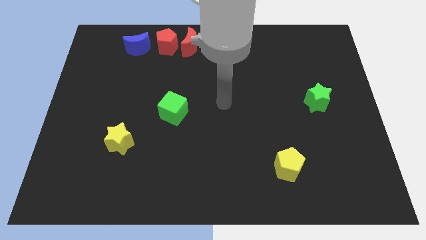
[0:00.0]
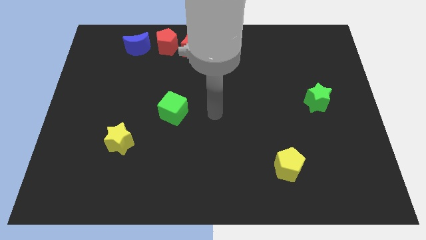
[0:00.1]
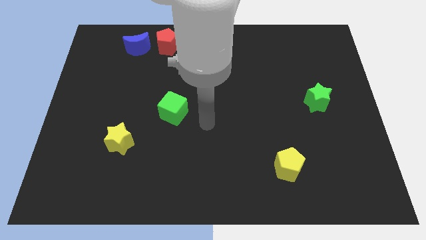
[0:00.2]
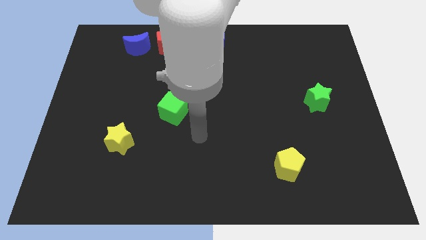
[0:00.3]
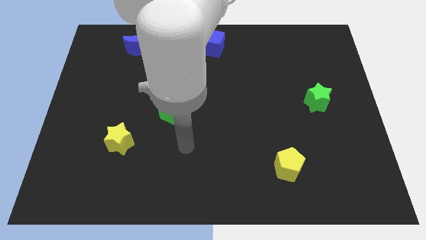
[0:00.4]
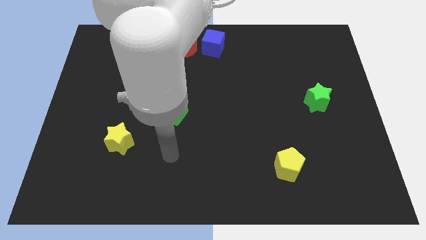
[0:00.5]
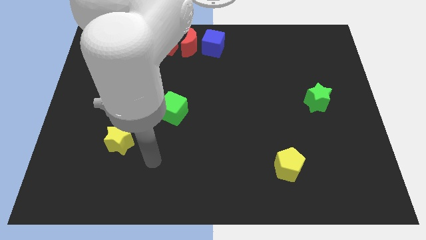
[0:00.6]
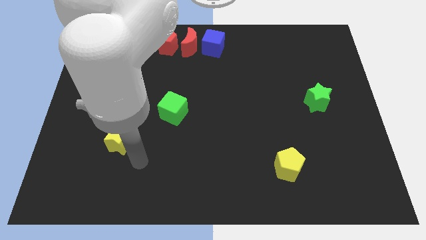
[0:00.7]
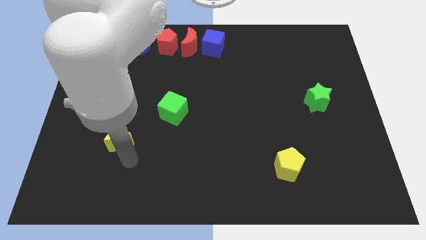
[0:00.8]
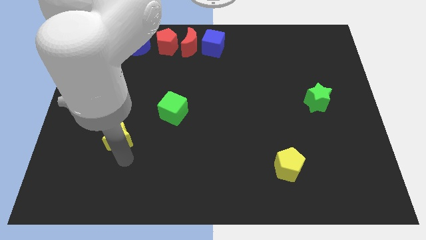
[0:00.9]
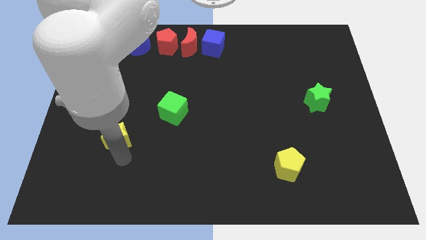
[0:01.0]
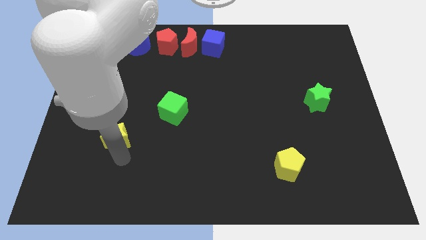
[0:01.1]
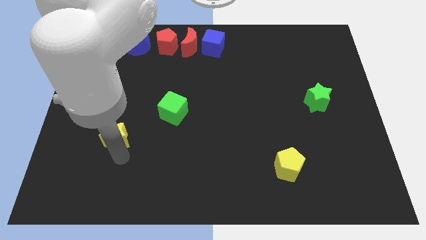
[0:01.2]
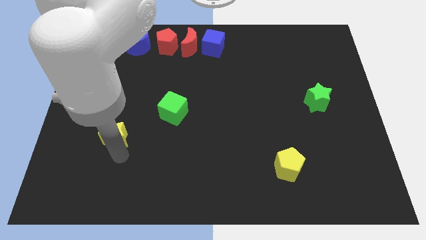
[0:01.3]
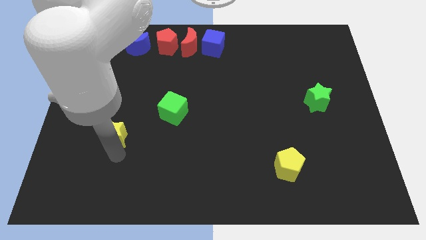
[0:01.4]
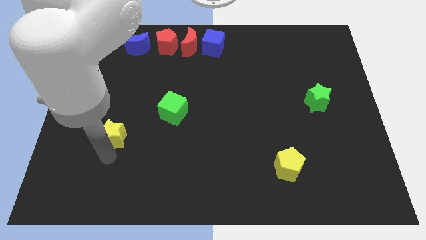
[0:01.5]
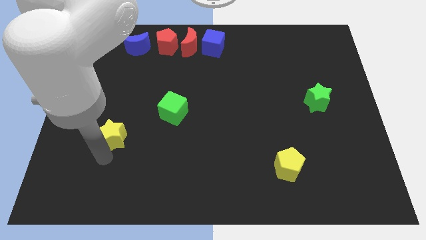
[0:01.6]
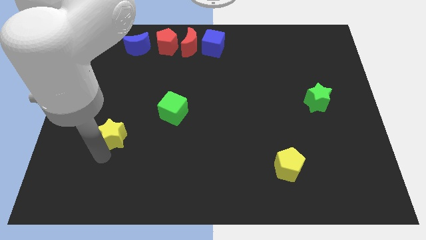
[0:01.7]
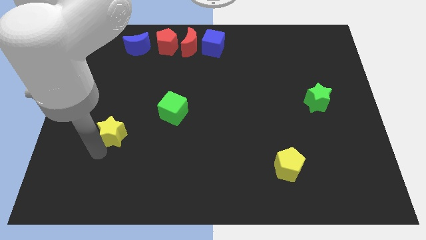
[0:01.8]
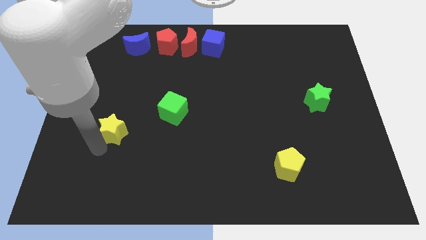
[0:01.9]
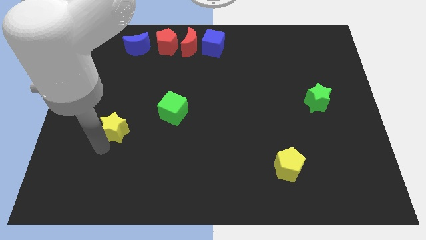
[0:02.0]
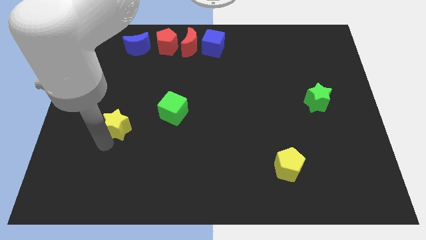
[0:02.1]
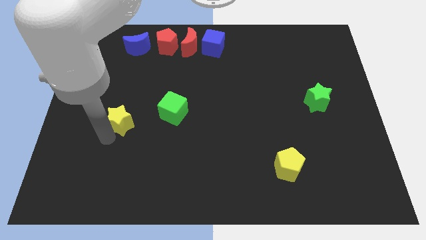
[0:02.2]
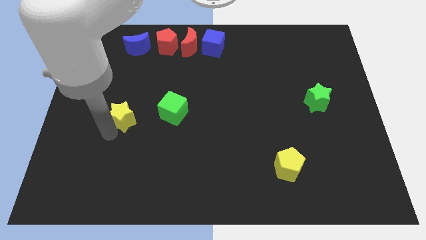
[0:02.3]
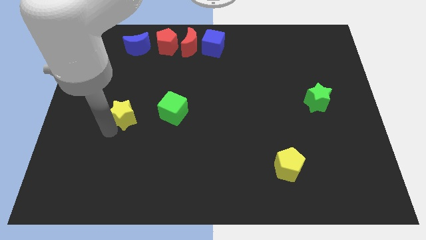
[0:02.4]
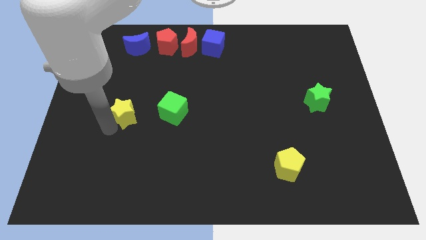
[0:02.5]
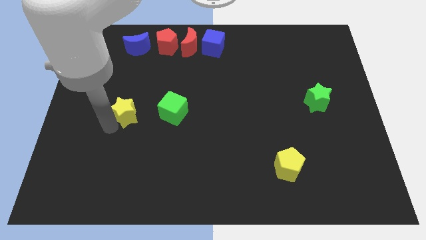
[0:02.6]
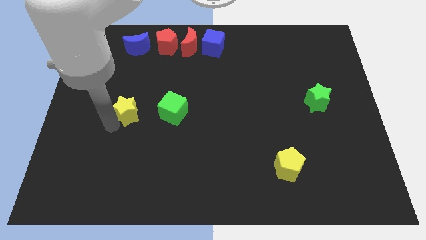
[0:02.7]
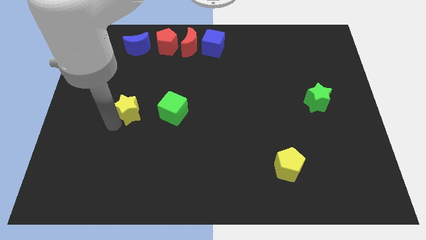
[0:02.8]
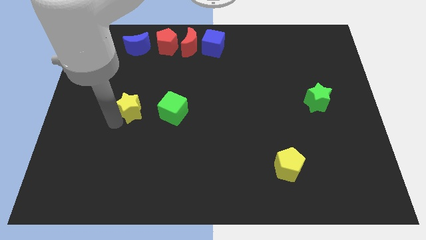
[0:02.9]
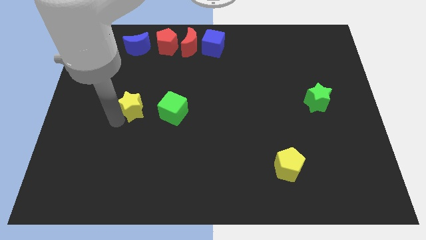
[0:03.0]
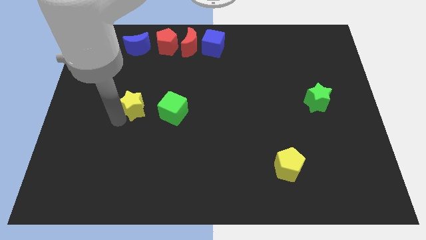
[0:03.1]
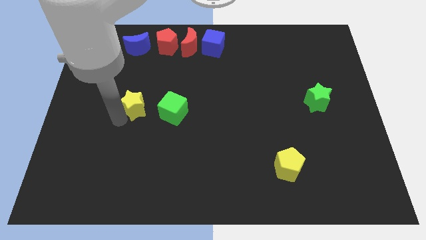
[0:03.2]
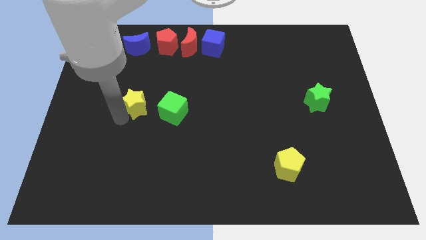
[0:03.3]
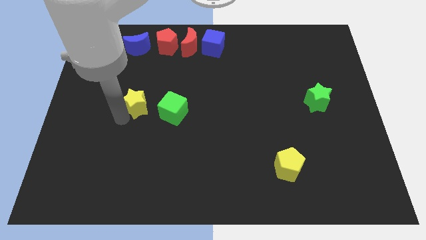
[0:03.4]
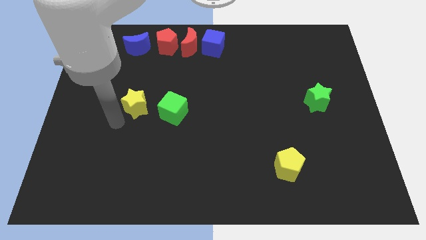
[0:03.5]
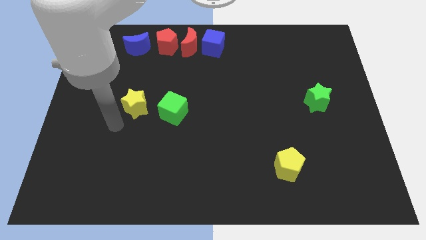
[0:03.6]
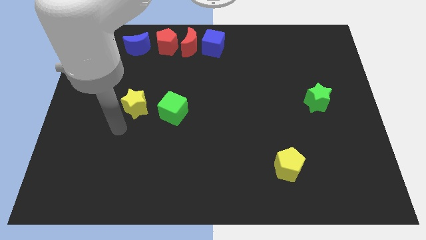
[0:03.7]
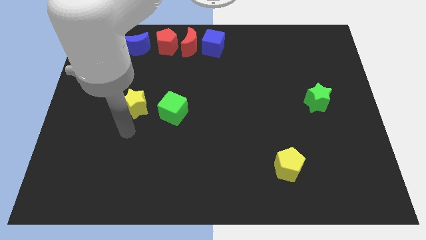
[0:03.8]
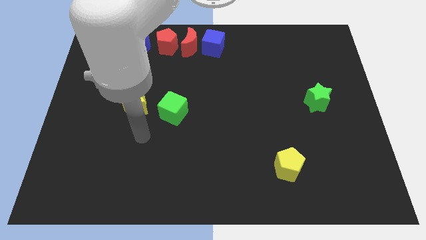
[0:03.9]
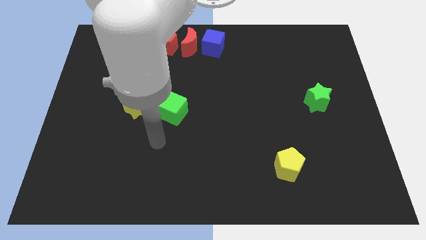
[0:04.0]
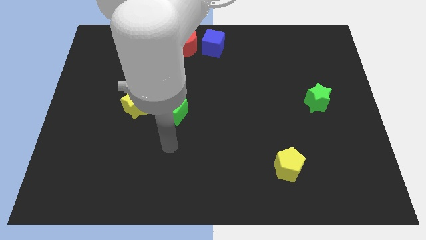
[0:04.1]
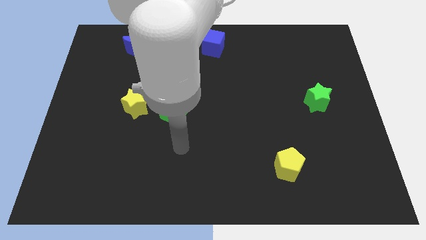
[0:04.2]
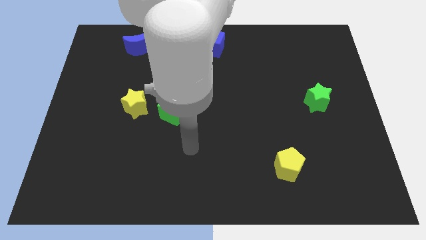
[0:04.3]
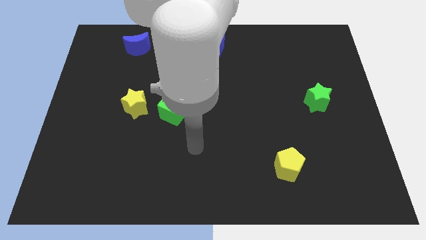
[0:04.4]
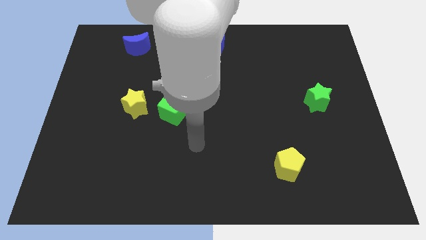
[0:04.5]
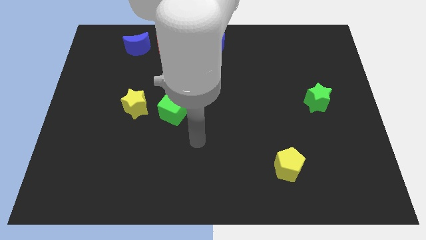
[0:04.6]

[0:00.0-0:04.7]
place yellow star to the left of green cube

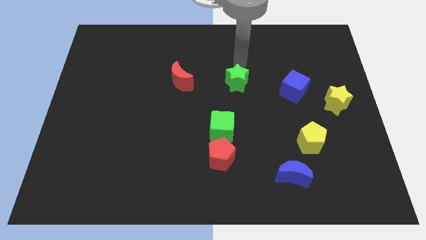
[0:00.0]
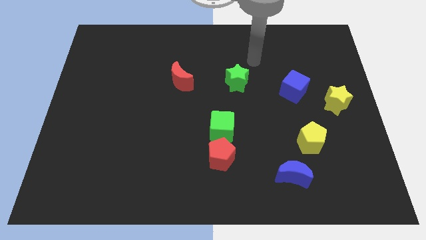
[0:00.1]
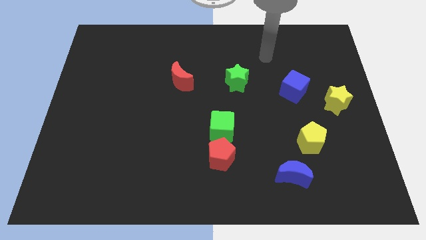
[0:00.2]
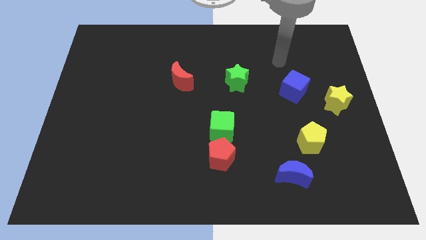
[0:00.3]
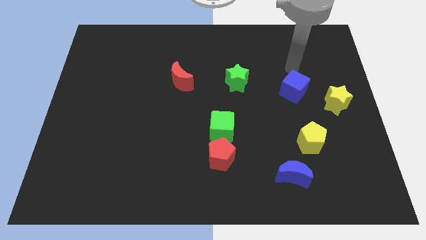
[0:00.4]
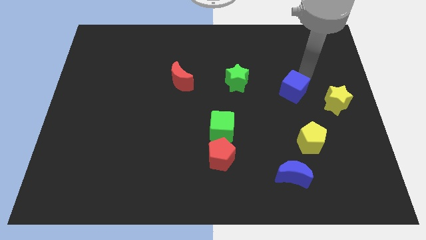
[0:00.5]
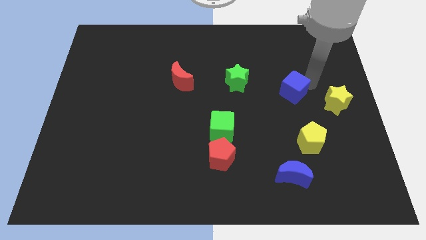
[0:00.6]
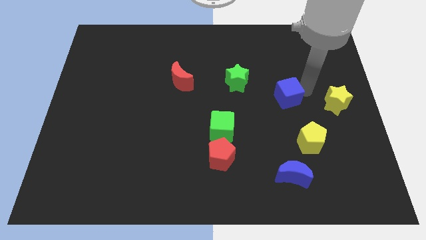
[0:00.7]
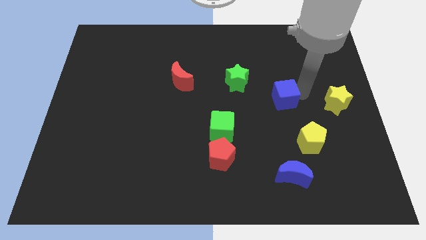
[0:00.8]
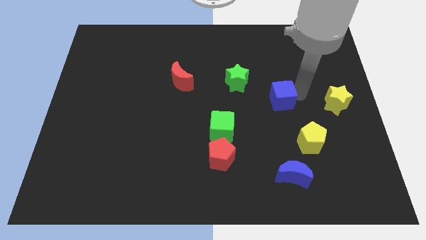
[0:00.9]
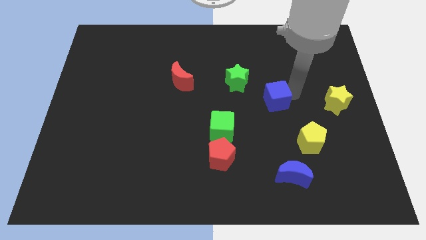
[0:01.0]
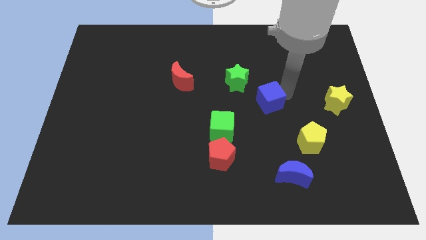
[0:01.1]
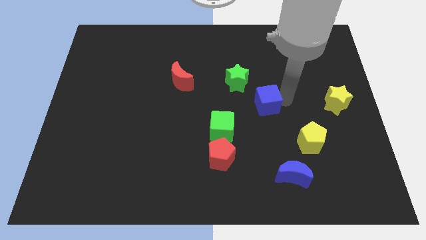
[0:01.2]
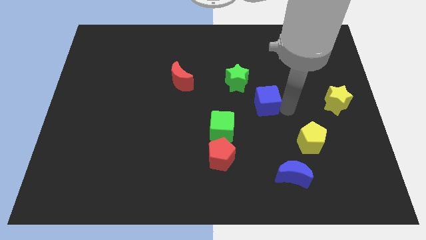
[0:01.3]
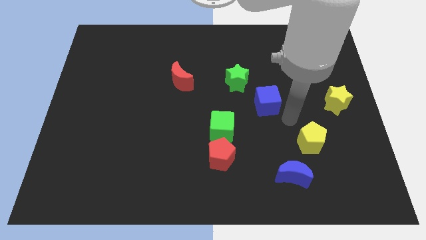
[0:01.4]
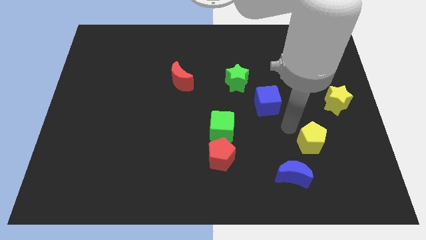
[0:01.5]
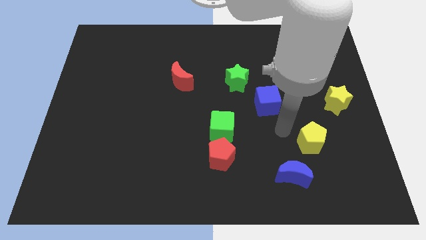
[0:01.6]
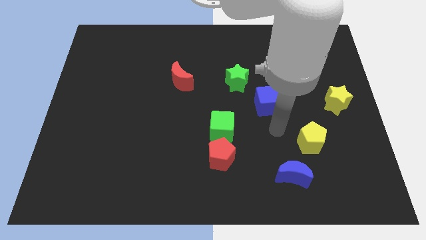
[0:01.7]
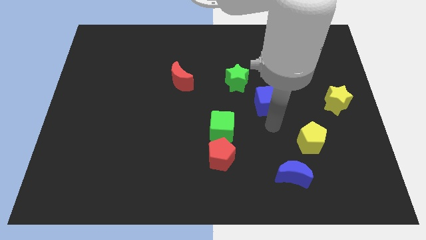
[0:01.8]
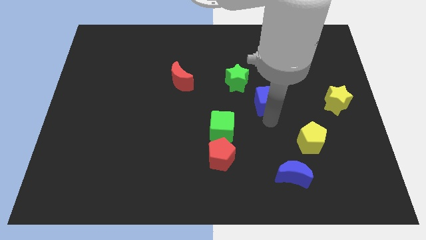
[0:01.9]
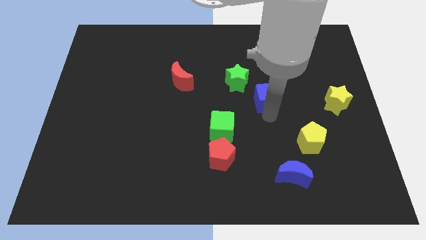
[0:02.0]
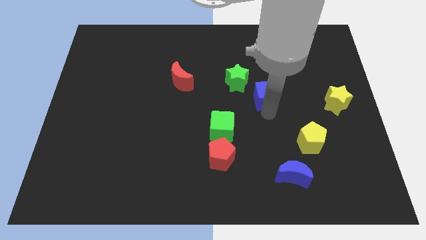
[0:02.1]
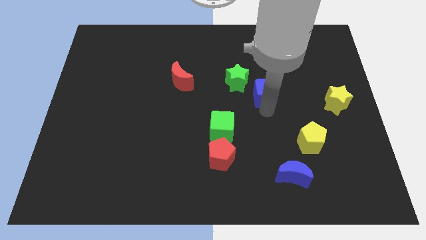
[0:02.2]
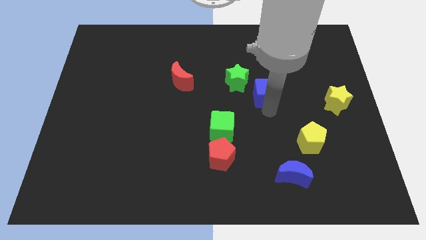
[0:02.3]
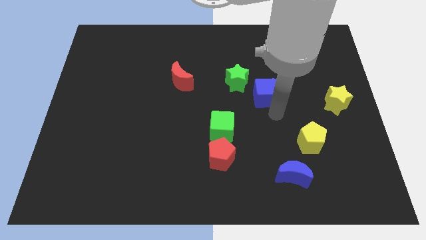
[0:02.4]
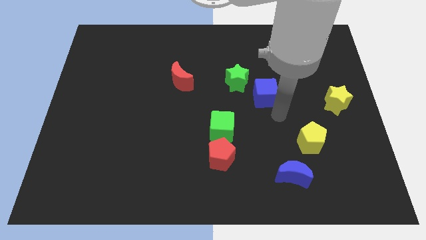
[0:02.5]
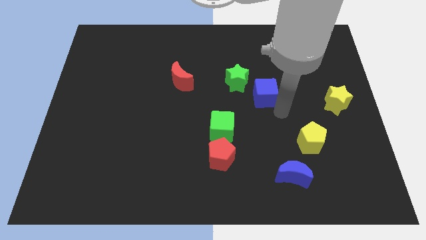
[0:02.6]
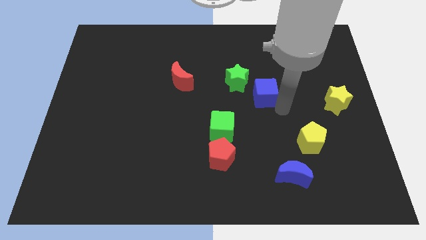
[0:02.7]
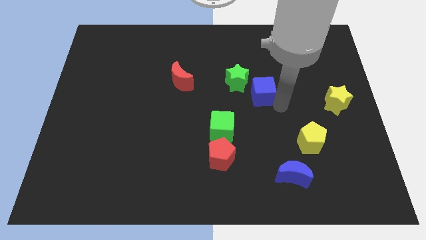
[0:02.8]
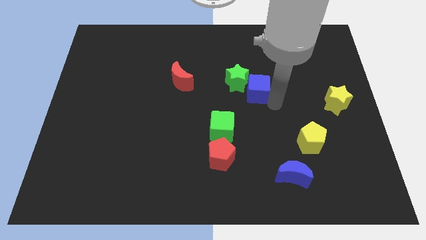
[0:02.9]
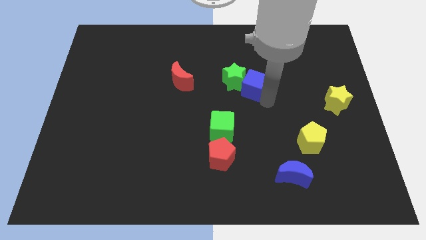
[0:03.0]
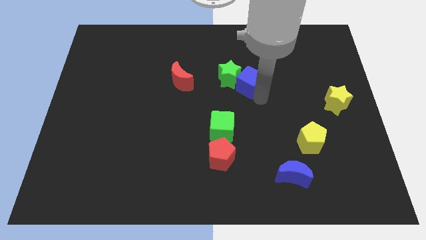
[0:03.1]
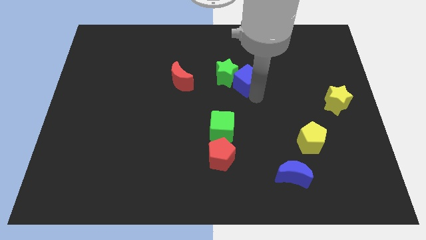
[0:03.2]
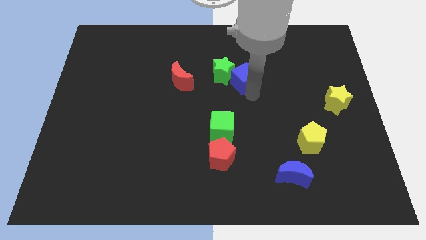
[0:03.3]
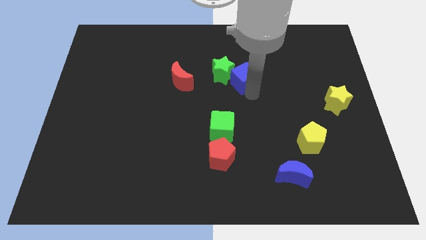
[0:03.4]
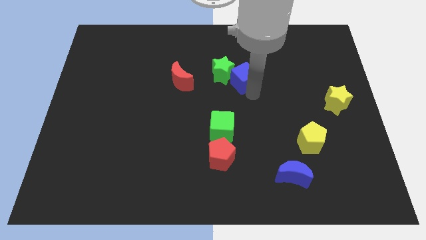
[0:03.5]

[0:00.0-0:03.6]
move the blue cube into the green star

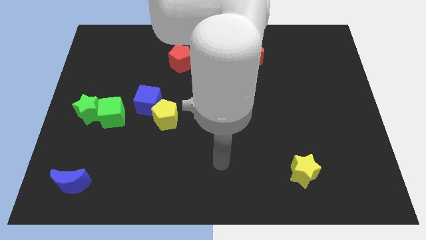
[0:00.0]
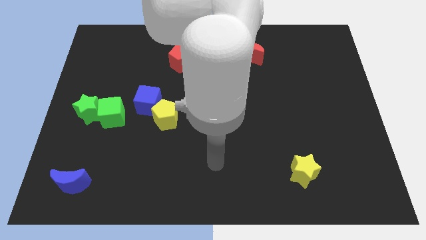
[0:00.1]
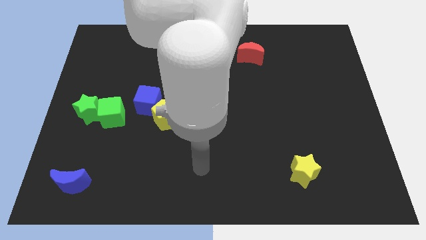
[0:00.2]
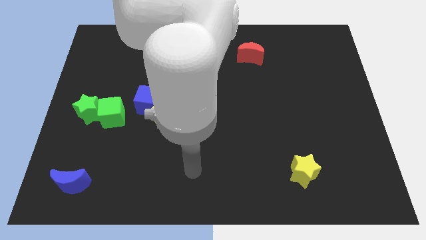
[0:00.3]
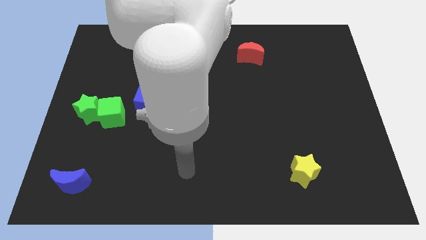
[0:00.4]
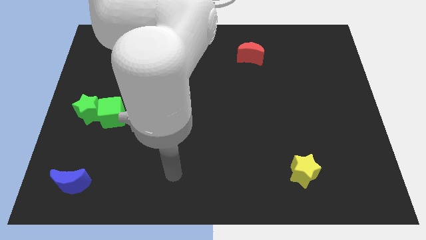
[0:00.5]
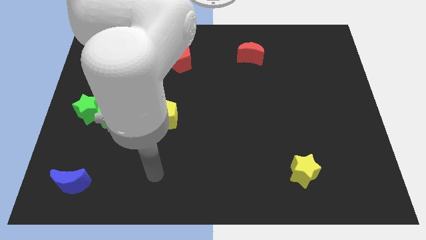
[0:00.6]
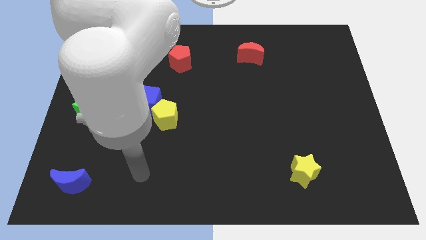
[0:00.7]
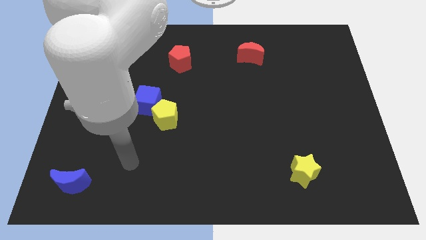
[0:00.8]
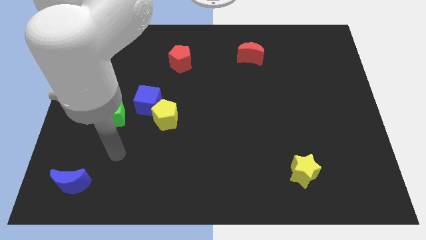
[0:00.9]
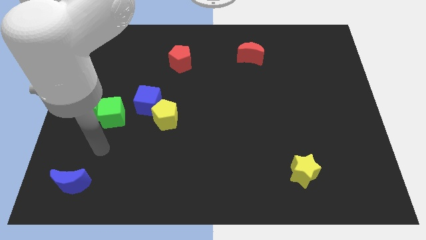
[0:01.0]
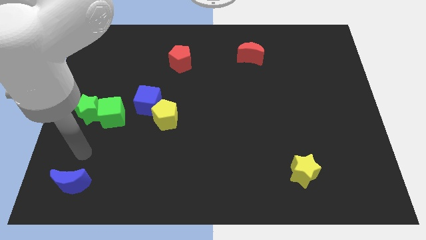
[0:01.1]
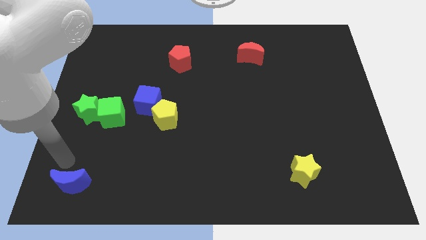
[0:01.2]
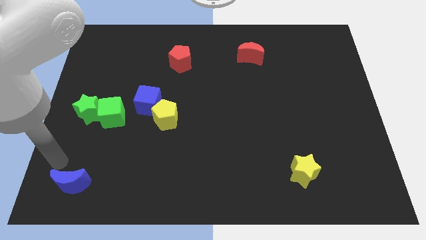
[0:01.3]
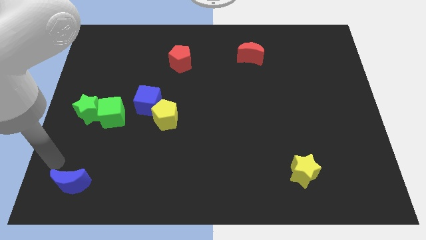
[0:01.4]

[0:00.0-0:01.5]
place the arm at the top left side of the blue crescent
